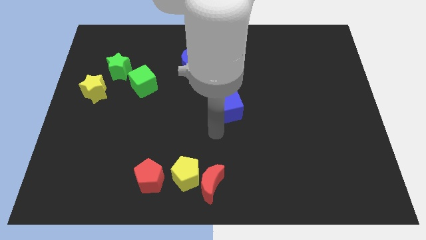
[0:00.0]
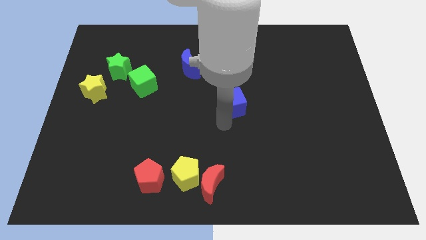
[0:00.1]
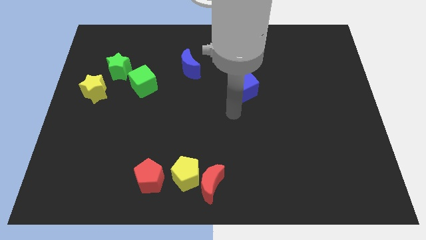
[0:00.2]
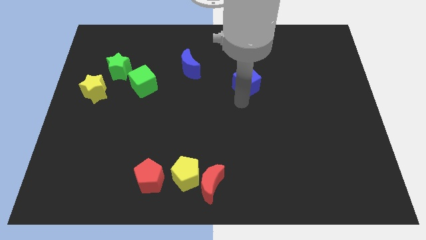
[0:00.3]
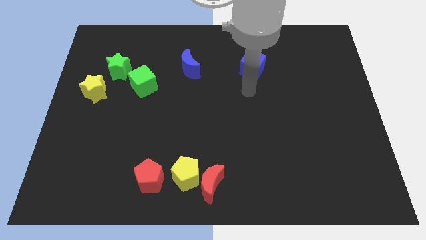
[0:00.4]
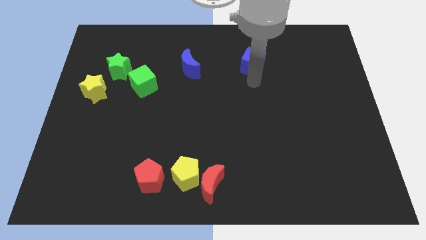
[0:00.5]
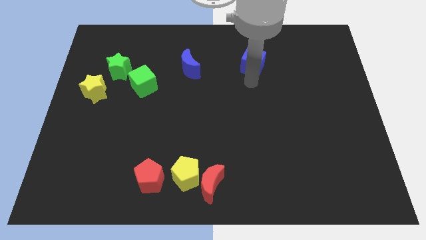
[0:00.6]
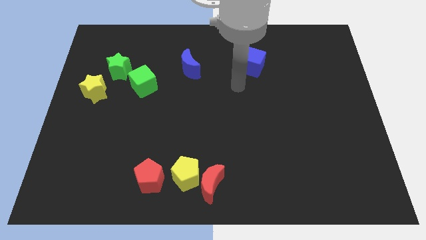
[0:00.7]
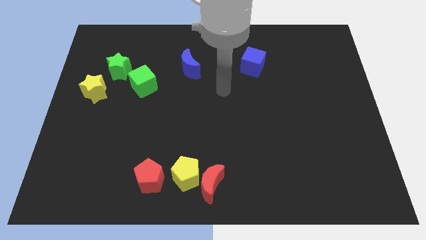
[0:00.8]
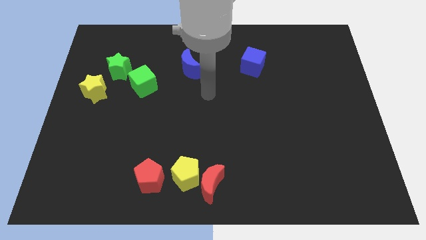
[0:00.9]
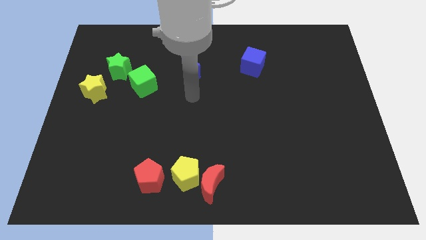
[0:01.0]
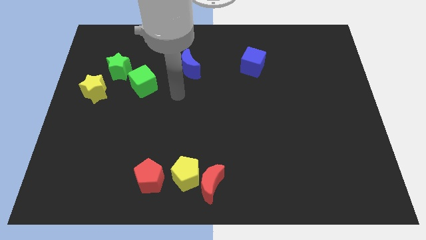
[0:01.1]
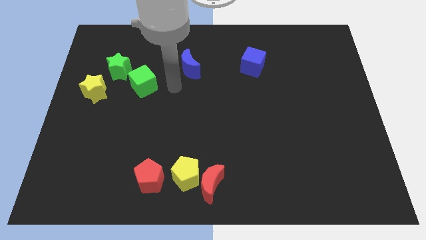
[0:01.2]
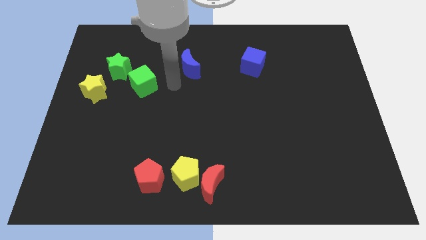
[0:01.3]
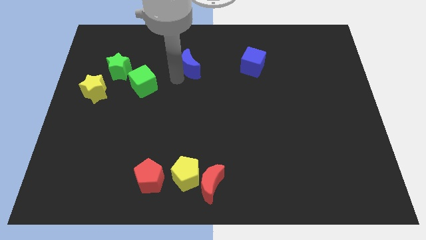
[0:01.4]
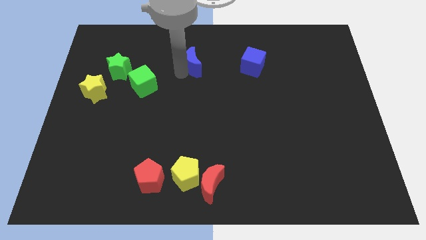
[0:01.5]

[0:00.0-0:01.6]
slide the blue cube to the right side of the blue moon

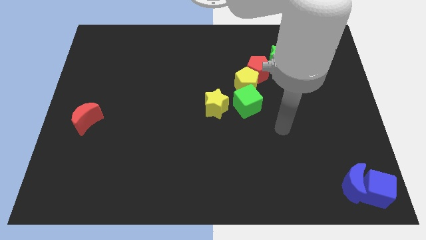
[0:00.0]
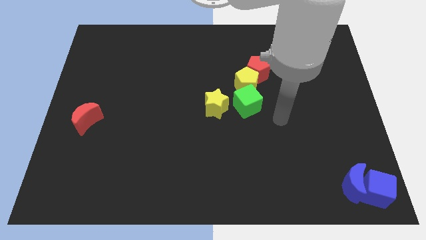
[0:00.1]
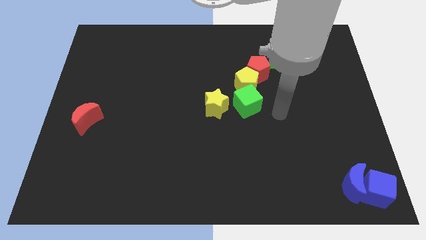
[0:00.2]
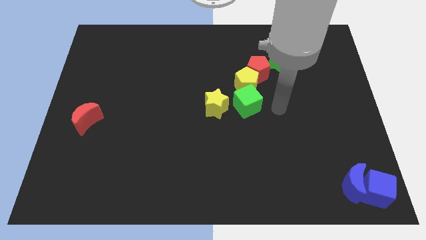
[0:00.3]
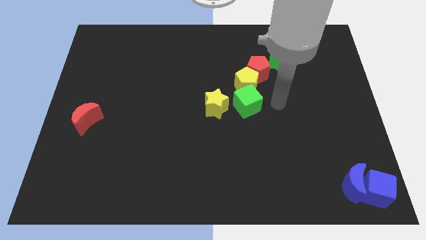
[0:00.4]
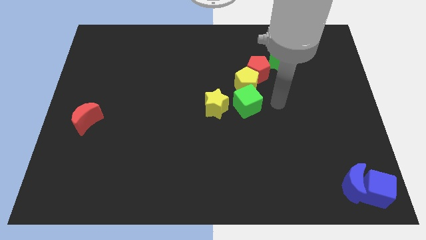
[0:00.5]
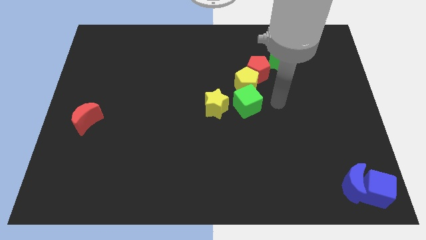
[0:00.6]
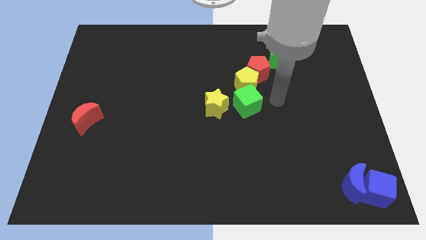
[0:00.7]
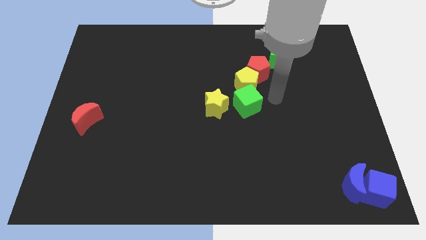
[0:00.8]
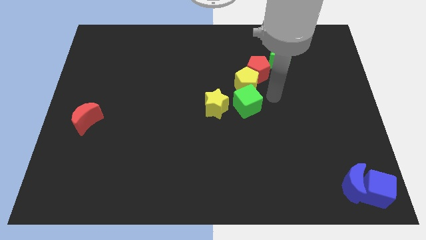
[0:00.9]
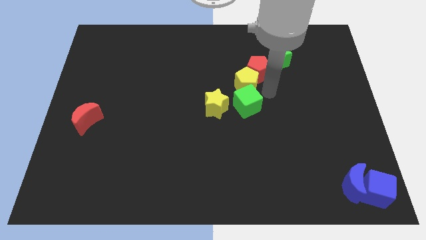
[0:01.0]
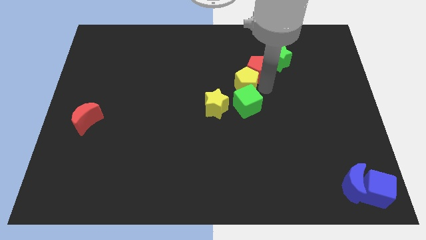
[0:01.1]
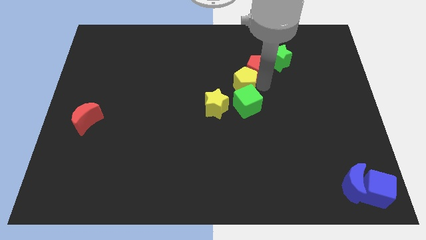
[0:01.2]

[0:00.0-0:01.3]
place your arm close to yellow pentagon

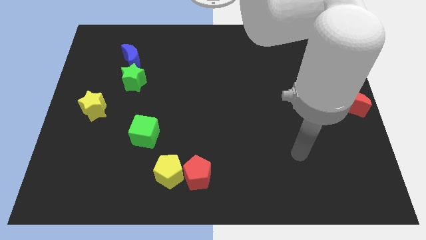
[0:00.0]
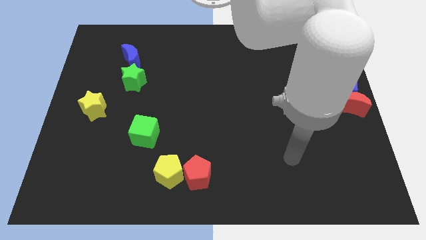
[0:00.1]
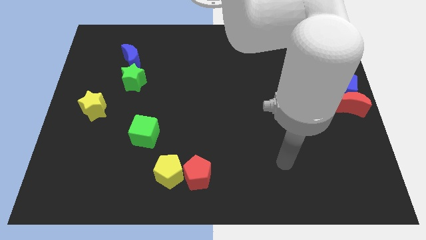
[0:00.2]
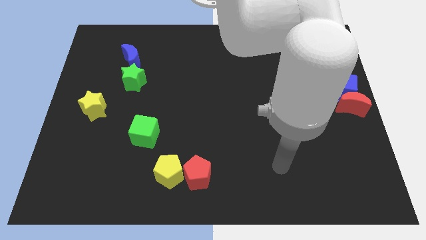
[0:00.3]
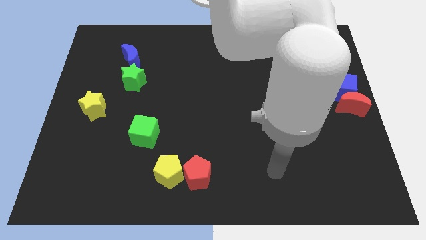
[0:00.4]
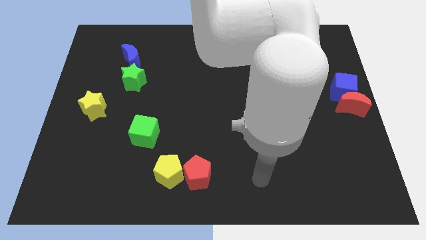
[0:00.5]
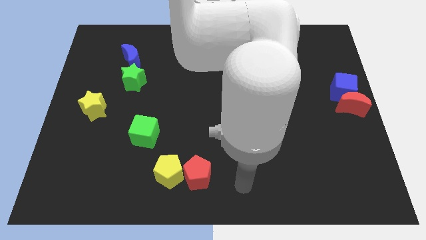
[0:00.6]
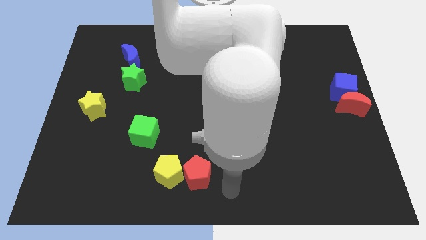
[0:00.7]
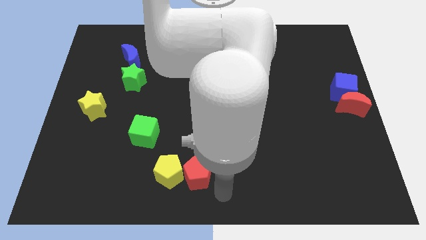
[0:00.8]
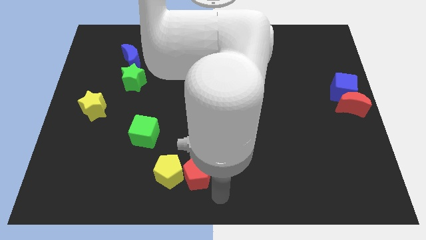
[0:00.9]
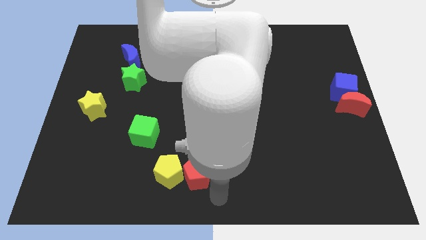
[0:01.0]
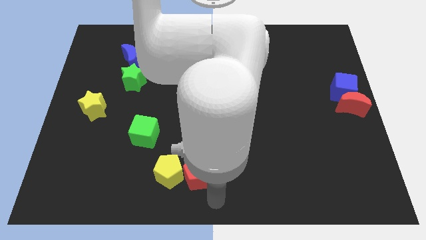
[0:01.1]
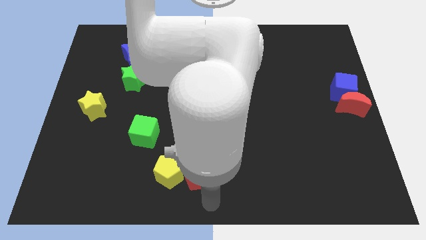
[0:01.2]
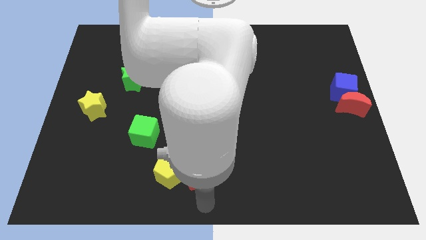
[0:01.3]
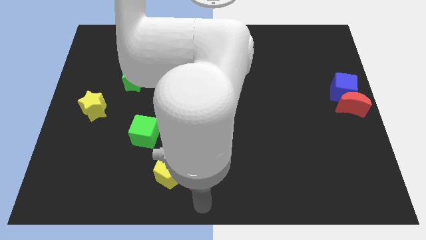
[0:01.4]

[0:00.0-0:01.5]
place the arm towards the bottom center of the board

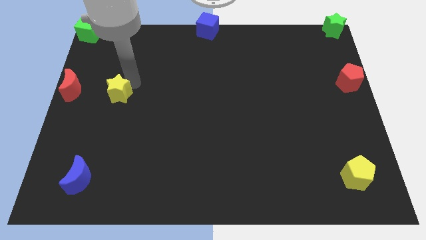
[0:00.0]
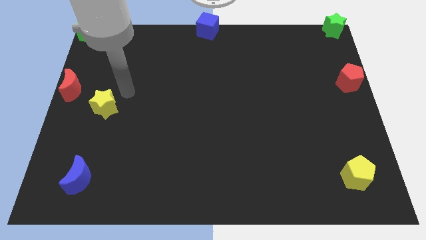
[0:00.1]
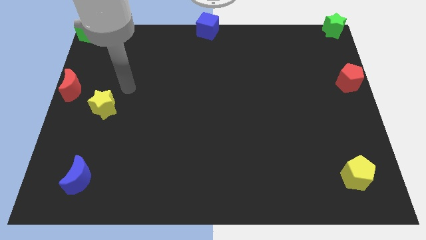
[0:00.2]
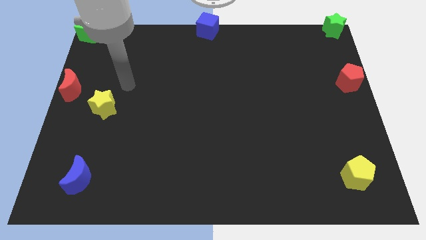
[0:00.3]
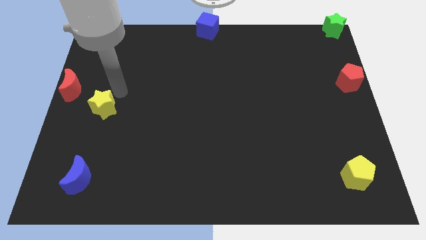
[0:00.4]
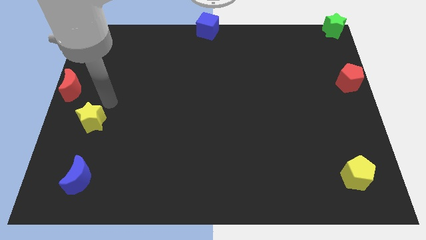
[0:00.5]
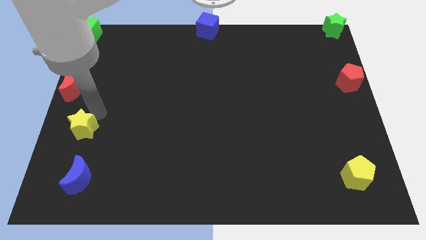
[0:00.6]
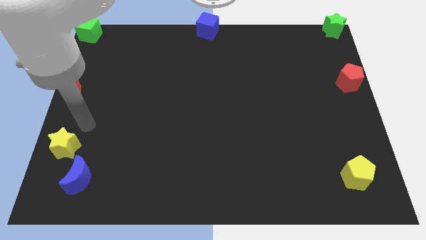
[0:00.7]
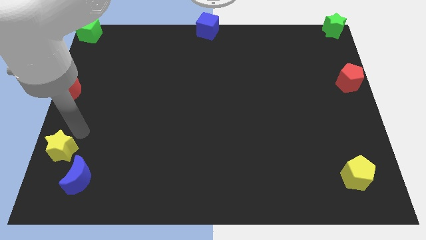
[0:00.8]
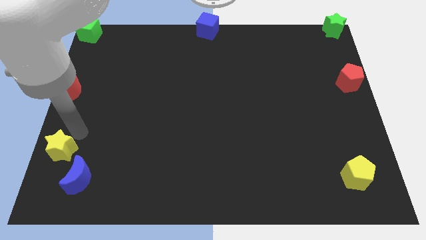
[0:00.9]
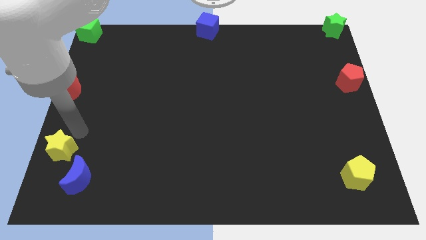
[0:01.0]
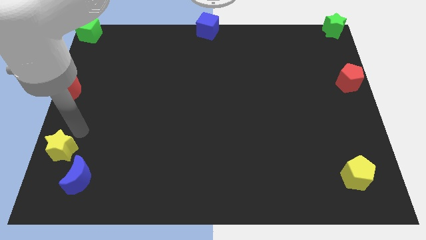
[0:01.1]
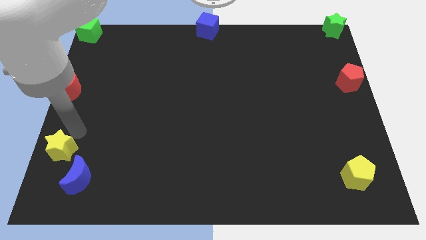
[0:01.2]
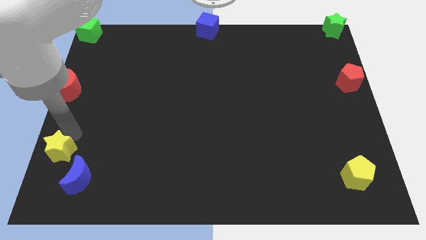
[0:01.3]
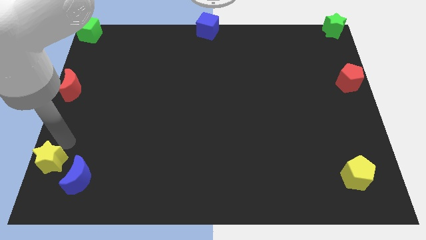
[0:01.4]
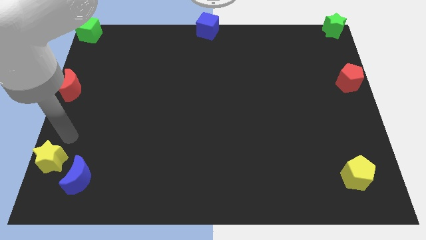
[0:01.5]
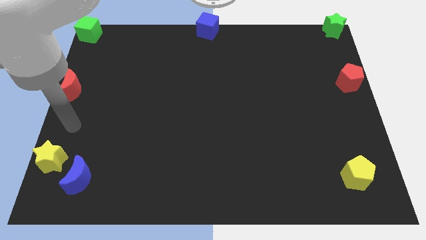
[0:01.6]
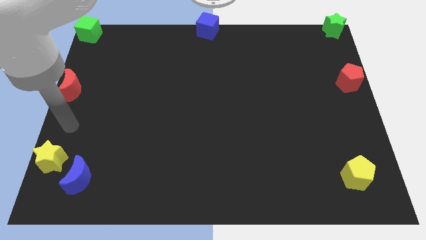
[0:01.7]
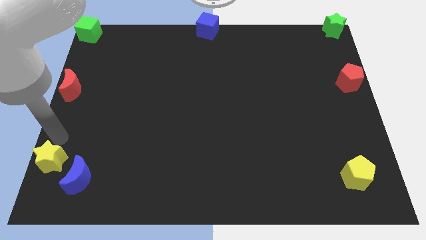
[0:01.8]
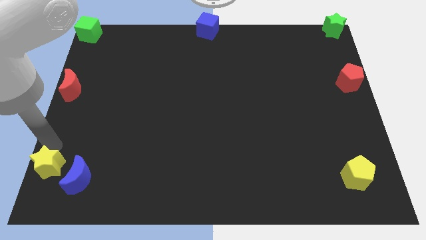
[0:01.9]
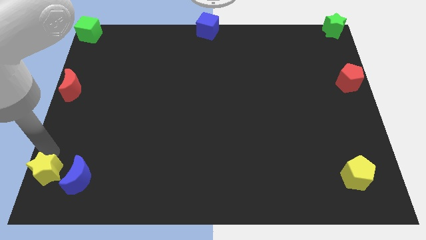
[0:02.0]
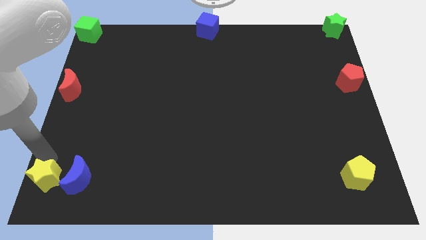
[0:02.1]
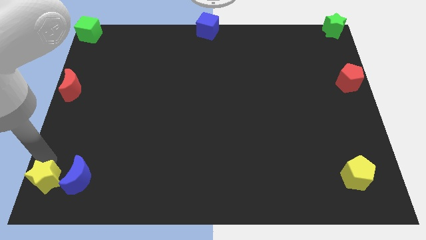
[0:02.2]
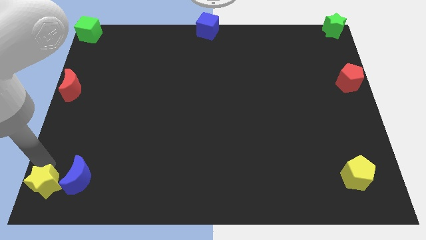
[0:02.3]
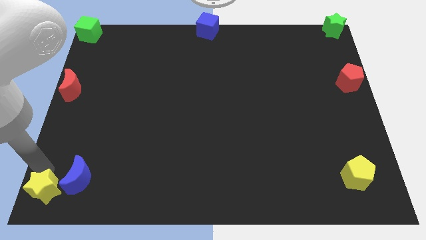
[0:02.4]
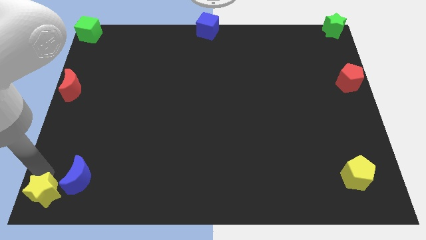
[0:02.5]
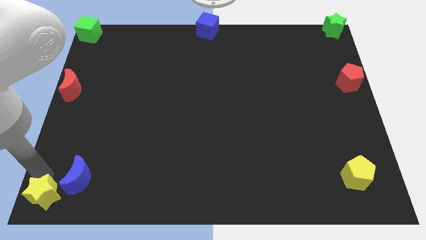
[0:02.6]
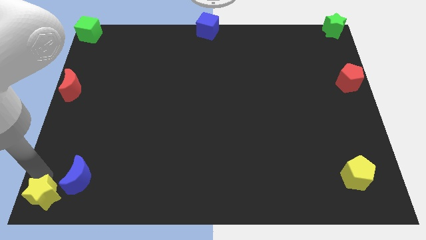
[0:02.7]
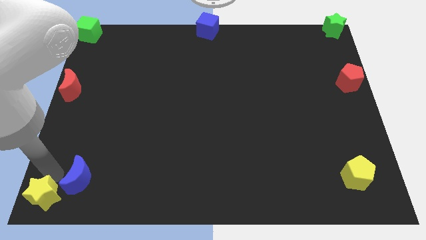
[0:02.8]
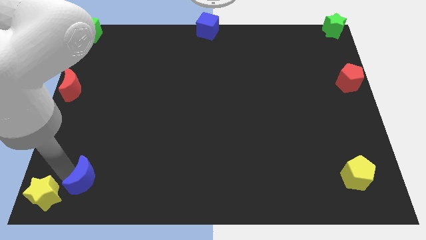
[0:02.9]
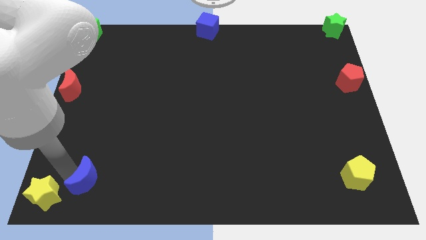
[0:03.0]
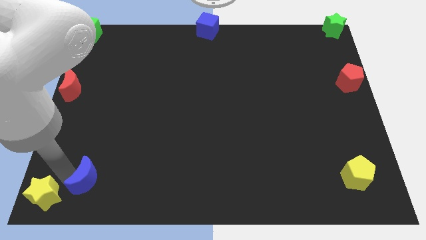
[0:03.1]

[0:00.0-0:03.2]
place the yellow star left of blue crescent

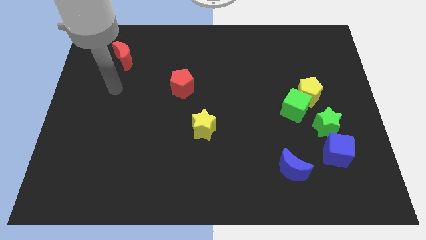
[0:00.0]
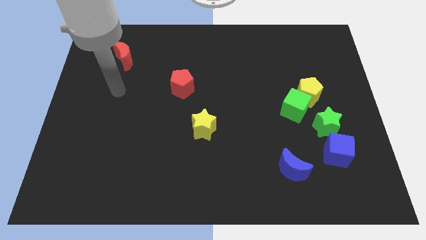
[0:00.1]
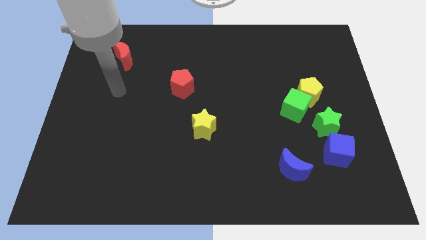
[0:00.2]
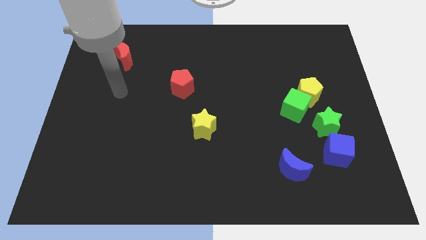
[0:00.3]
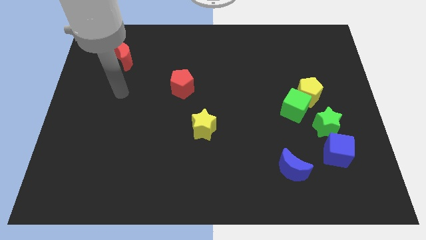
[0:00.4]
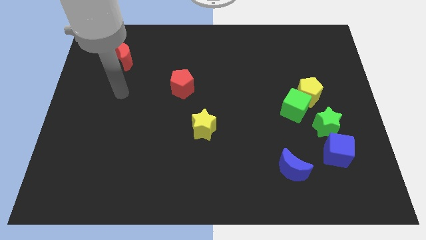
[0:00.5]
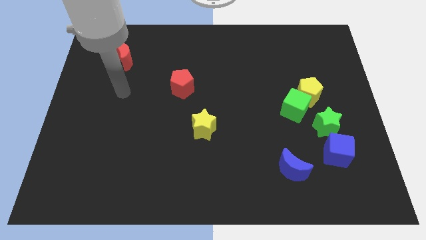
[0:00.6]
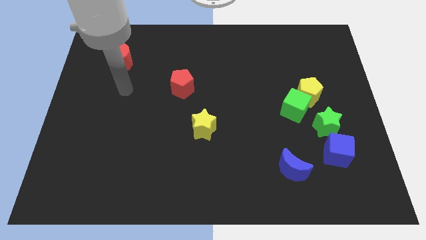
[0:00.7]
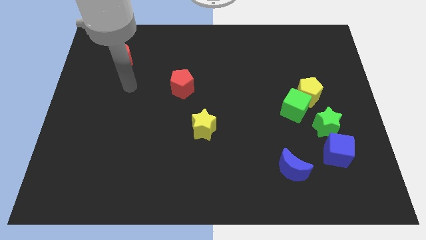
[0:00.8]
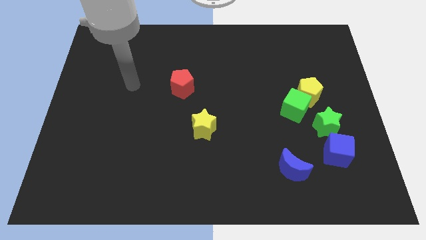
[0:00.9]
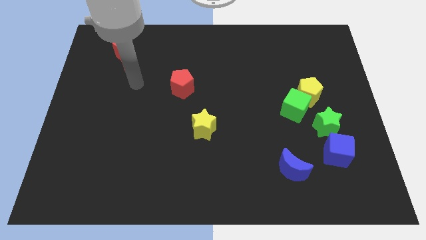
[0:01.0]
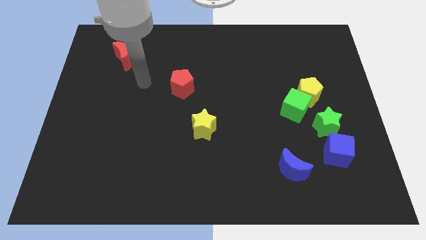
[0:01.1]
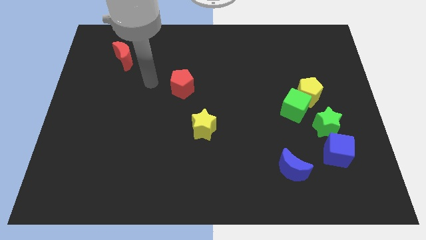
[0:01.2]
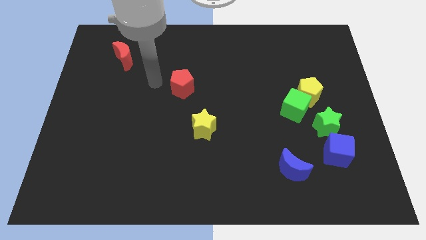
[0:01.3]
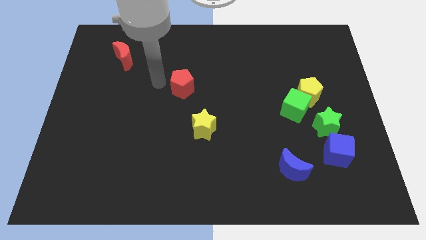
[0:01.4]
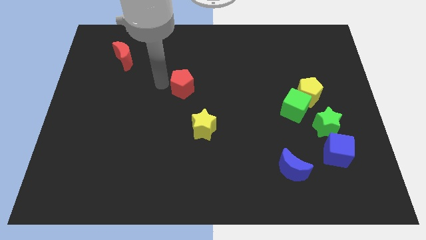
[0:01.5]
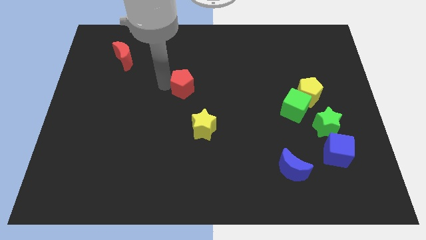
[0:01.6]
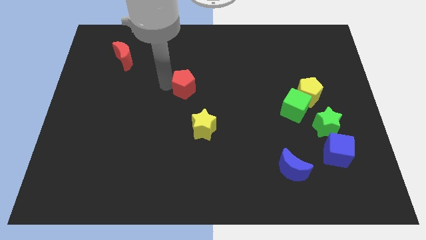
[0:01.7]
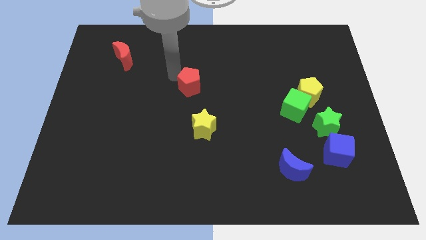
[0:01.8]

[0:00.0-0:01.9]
push red pentagon slightly to the right
